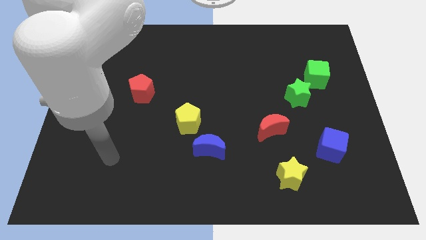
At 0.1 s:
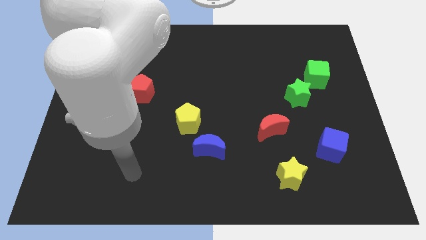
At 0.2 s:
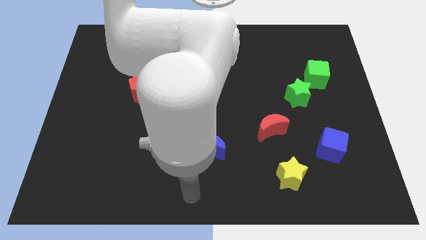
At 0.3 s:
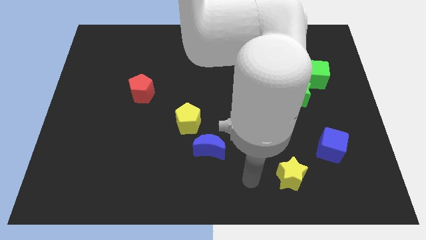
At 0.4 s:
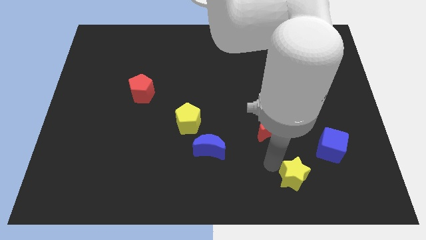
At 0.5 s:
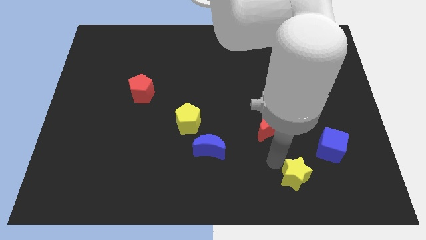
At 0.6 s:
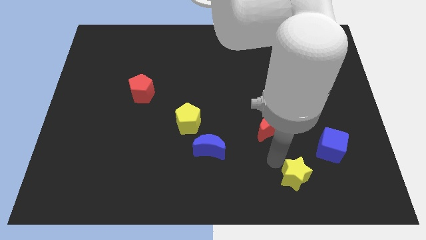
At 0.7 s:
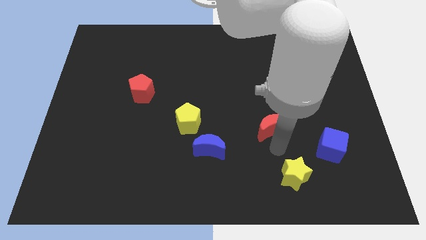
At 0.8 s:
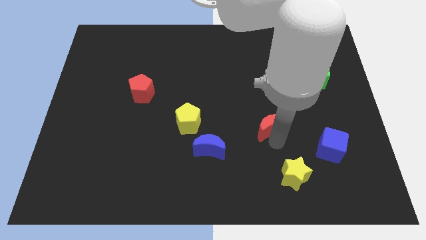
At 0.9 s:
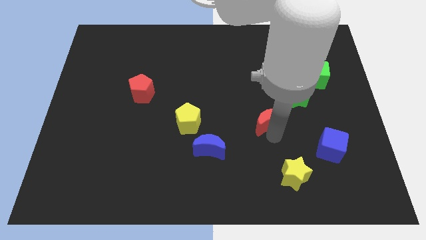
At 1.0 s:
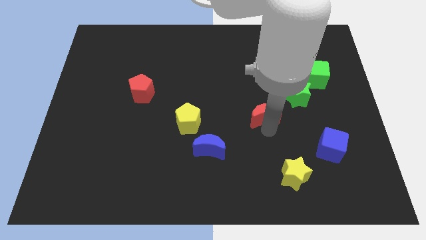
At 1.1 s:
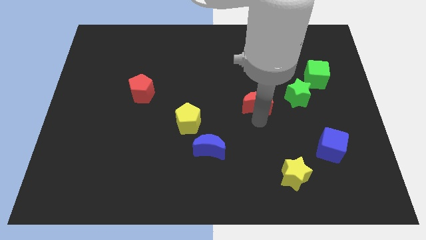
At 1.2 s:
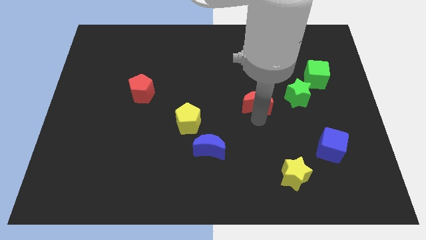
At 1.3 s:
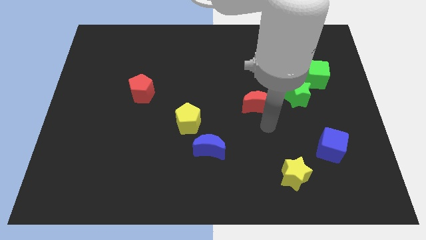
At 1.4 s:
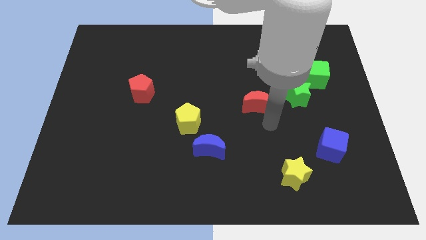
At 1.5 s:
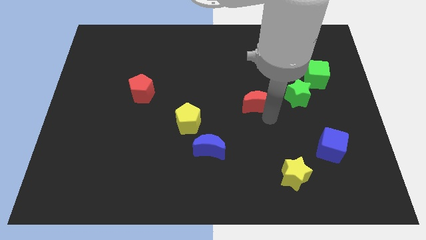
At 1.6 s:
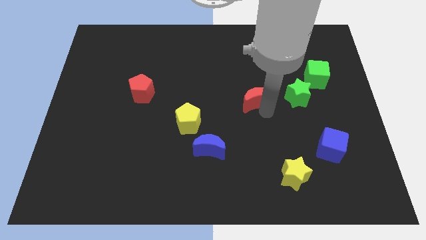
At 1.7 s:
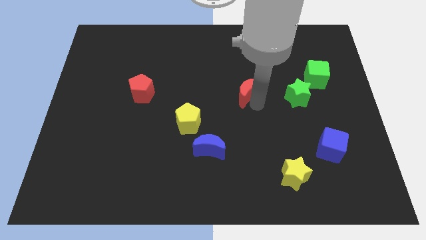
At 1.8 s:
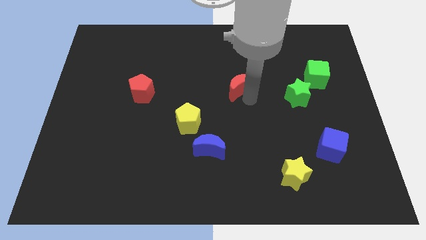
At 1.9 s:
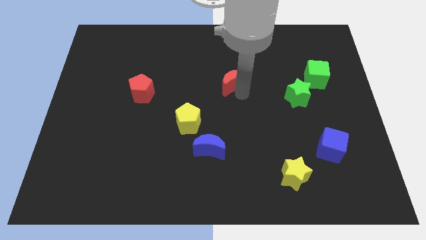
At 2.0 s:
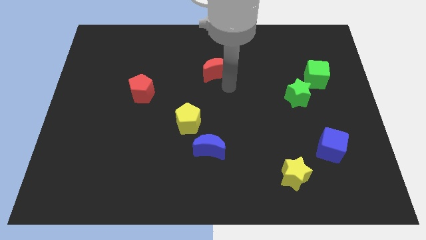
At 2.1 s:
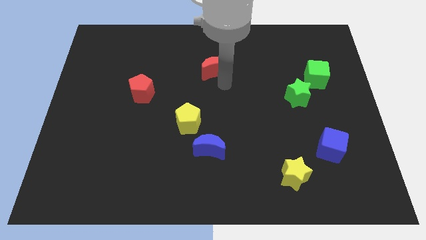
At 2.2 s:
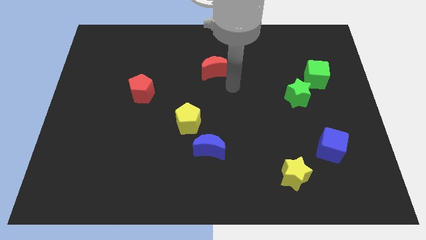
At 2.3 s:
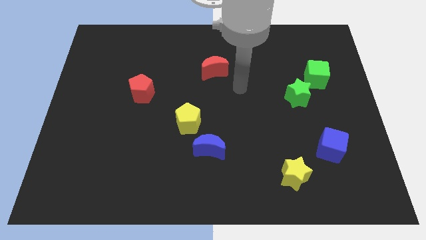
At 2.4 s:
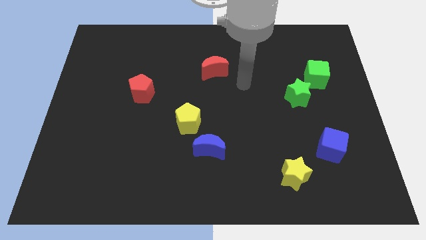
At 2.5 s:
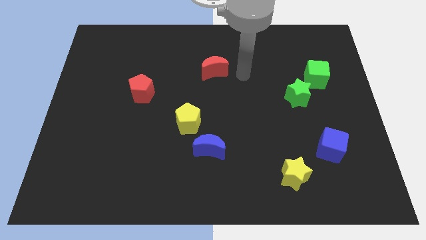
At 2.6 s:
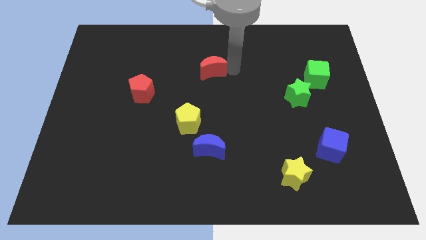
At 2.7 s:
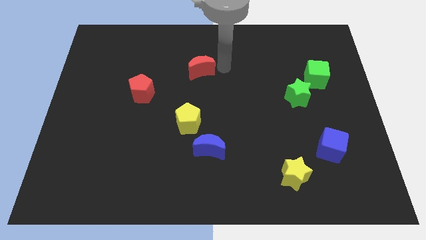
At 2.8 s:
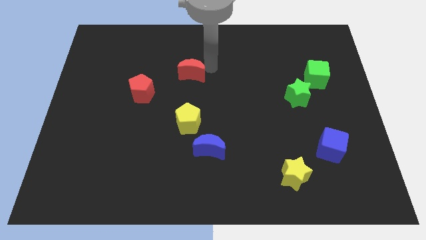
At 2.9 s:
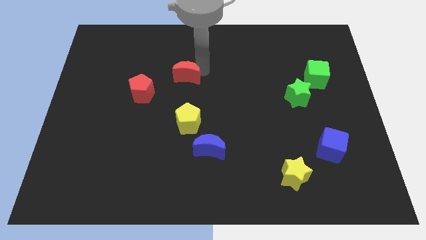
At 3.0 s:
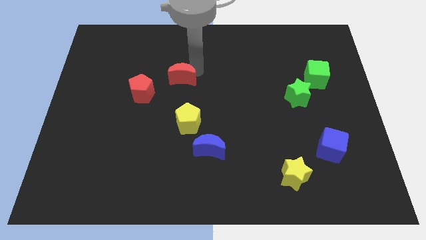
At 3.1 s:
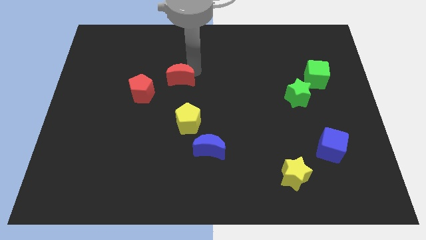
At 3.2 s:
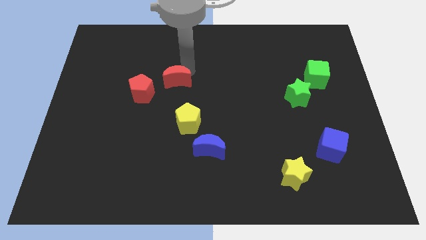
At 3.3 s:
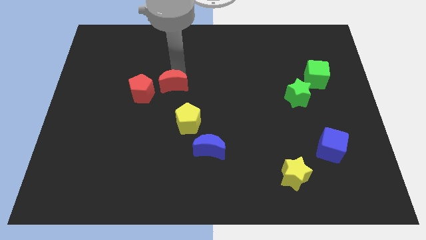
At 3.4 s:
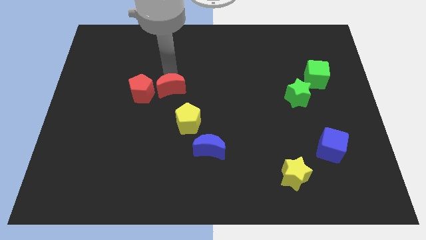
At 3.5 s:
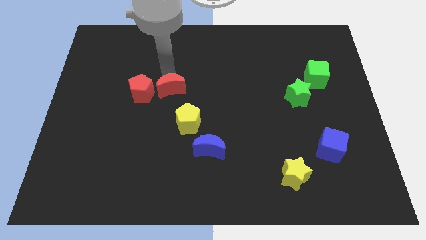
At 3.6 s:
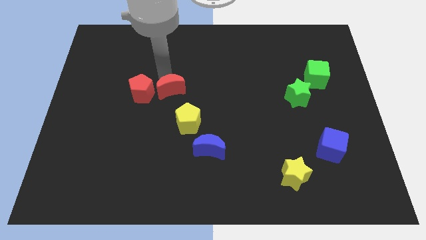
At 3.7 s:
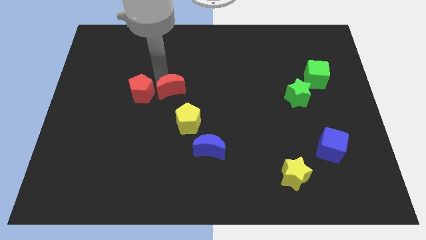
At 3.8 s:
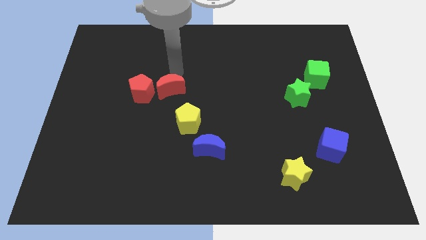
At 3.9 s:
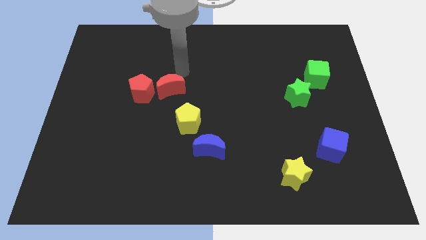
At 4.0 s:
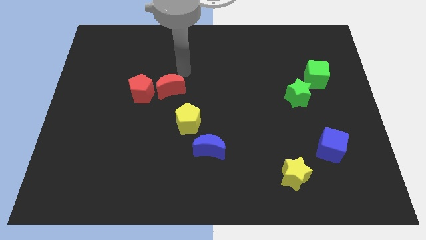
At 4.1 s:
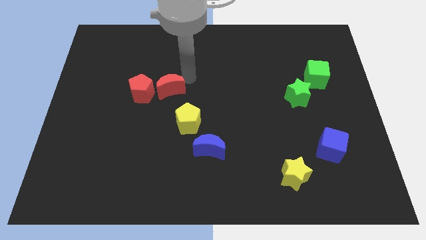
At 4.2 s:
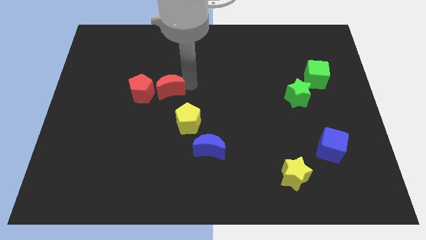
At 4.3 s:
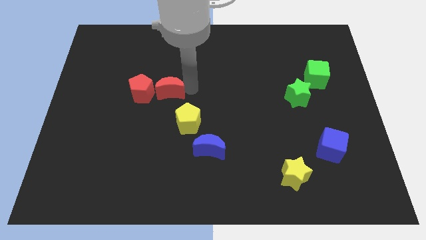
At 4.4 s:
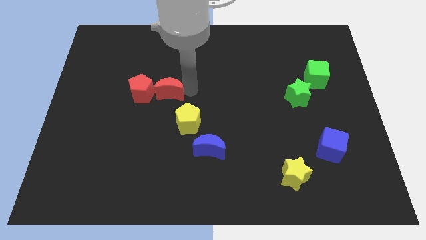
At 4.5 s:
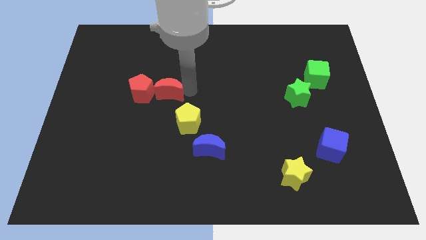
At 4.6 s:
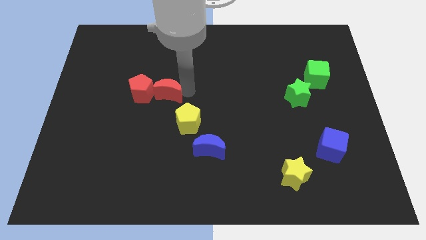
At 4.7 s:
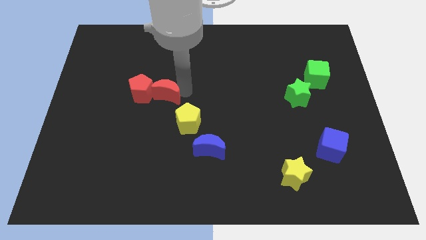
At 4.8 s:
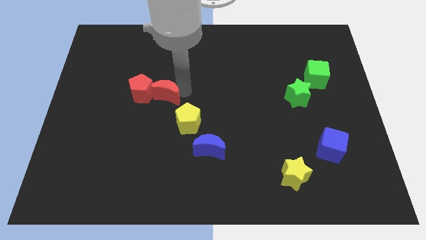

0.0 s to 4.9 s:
move the red moon towards the red pentagon

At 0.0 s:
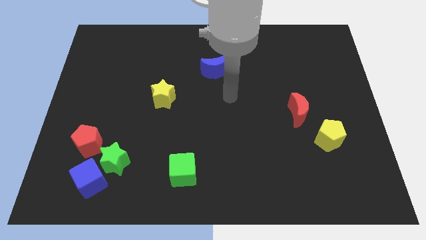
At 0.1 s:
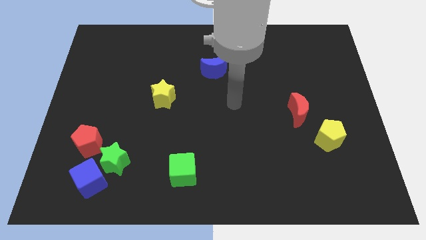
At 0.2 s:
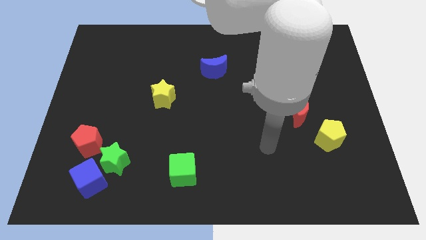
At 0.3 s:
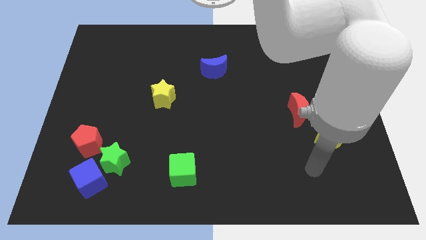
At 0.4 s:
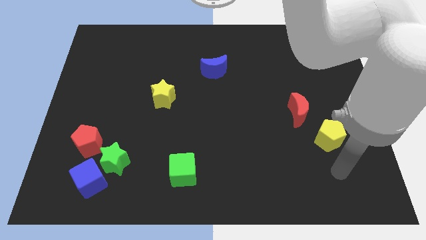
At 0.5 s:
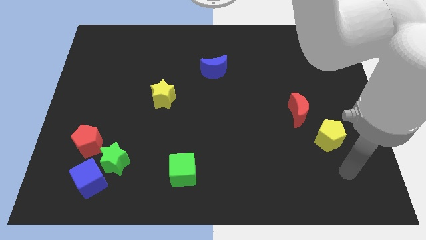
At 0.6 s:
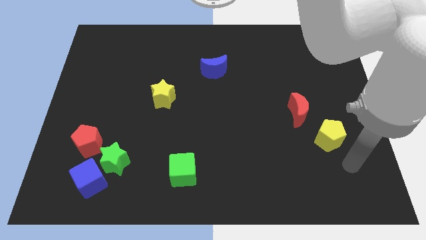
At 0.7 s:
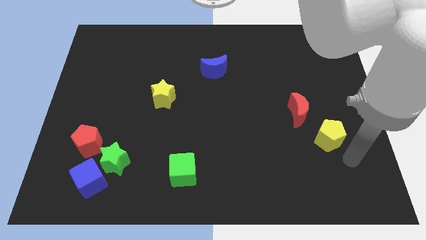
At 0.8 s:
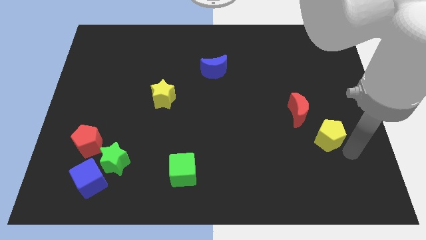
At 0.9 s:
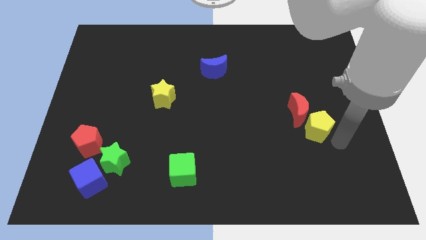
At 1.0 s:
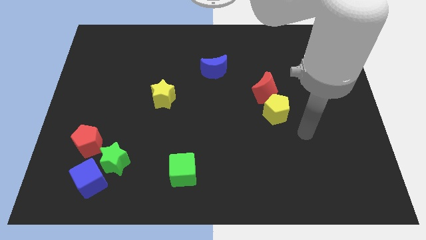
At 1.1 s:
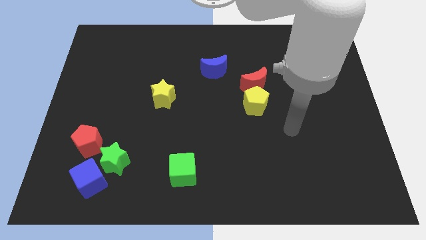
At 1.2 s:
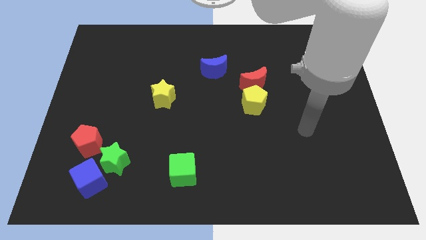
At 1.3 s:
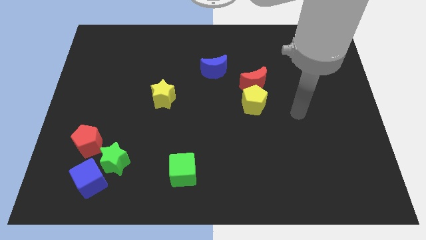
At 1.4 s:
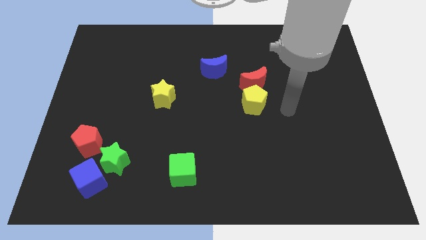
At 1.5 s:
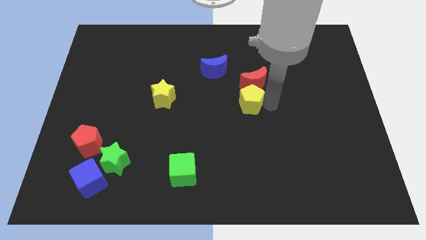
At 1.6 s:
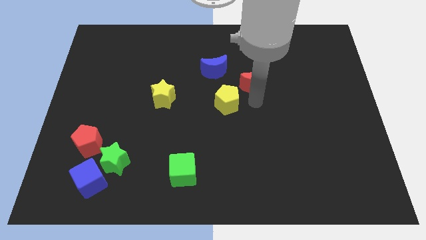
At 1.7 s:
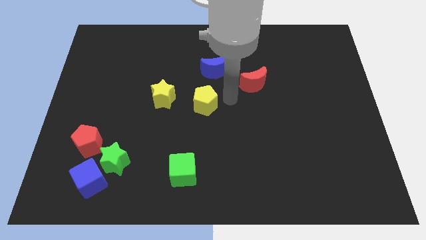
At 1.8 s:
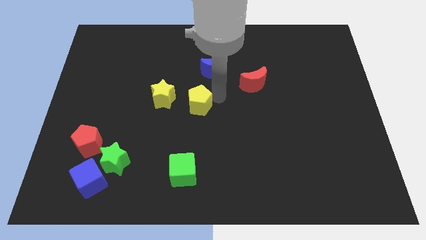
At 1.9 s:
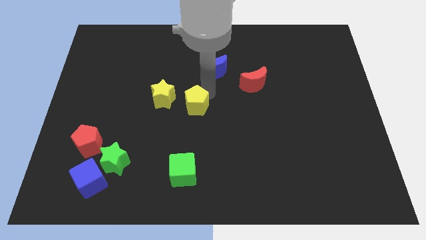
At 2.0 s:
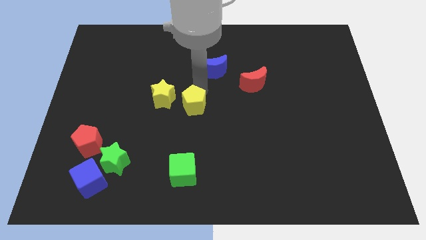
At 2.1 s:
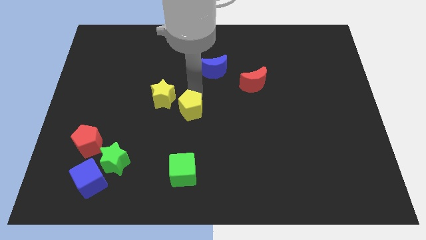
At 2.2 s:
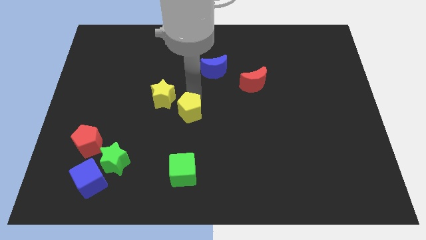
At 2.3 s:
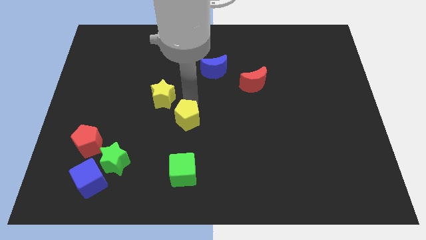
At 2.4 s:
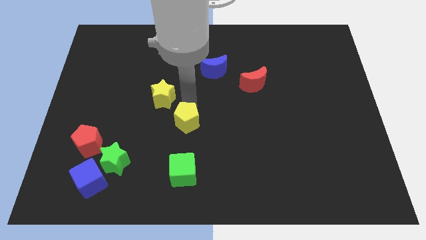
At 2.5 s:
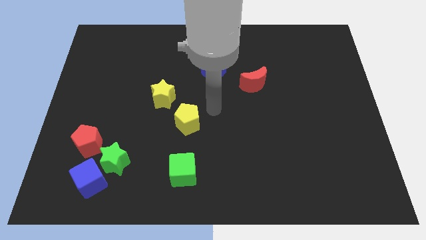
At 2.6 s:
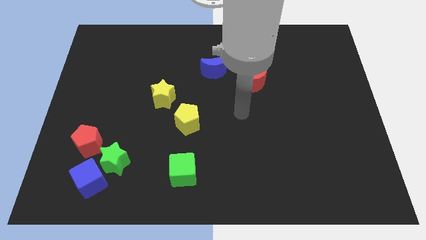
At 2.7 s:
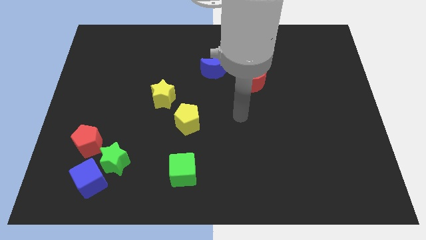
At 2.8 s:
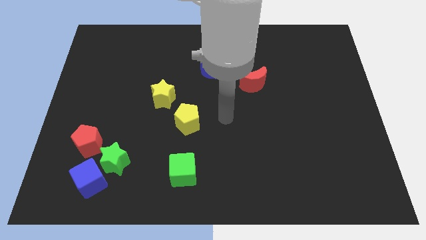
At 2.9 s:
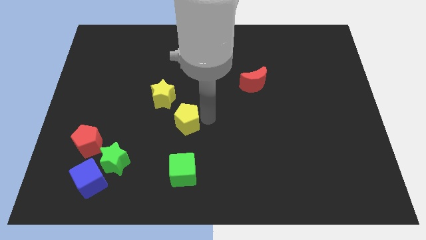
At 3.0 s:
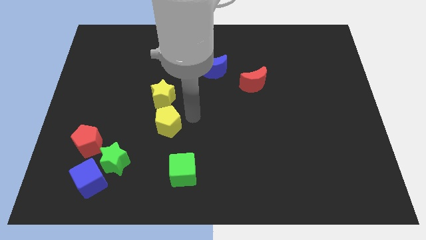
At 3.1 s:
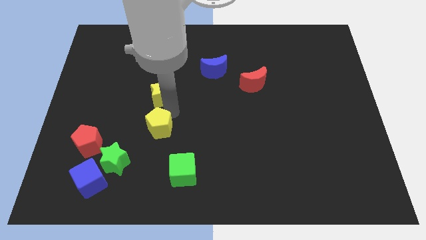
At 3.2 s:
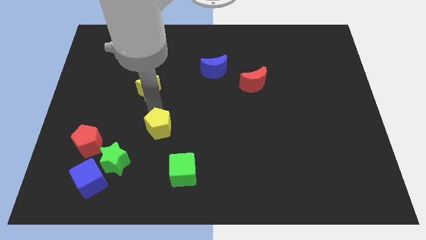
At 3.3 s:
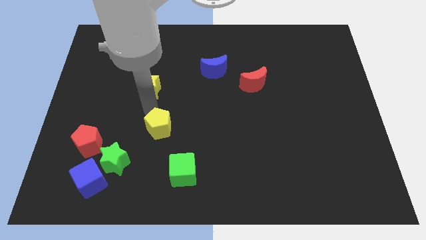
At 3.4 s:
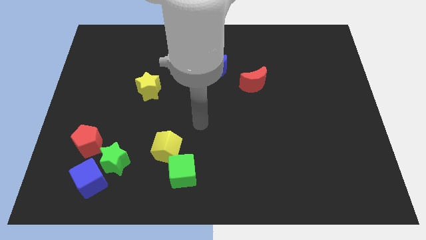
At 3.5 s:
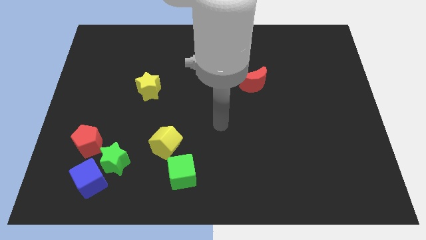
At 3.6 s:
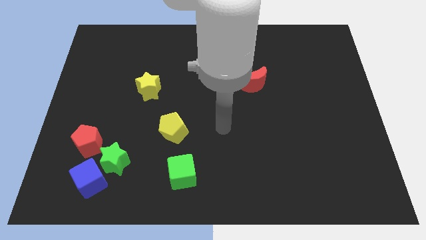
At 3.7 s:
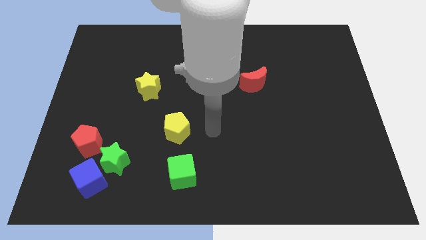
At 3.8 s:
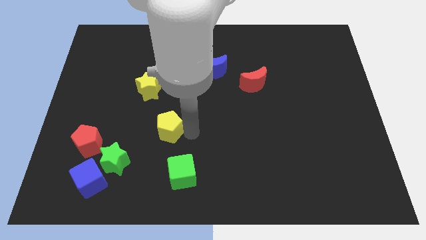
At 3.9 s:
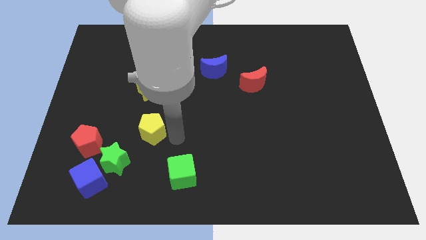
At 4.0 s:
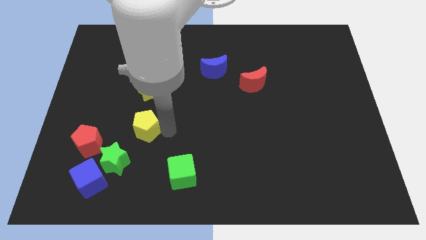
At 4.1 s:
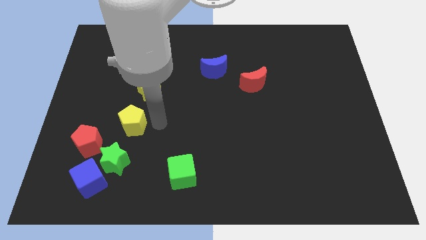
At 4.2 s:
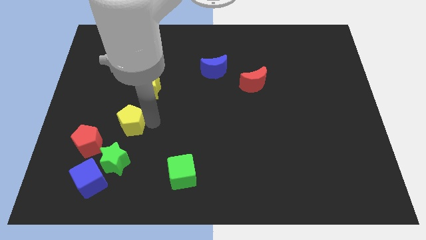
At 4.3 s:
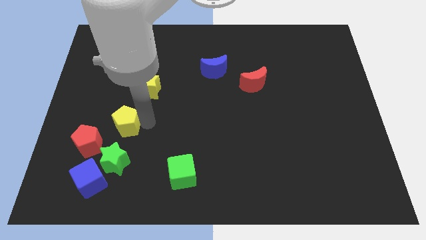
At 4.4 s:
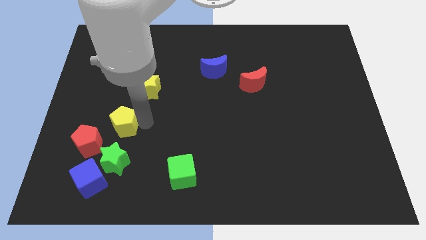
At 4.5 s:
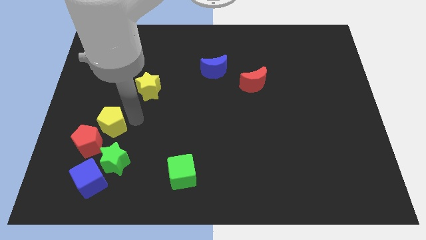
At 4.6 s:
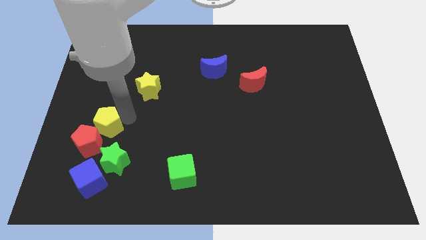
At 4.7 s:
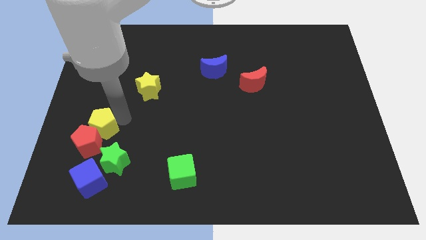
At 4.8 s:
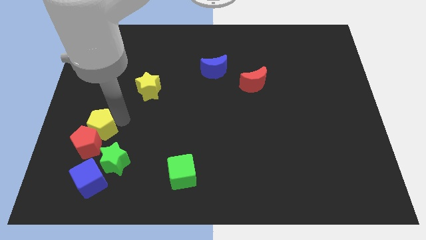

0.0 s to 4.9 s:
push the yellow pentagon next to the red pentagon
